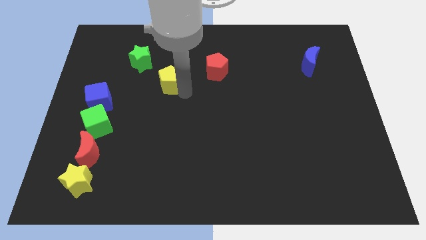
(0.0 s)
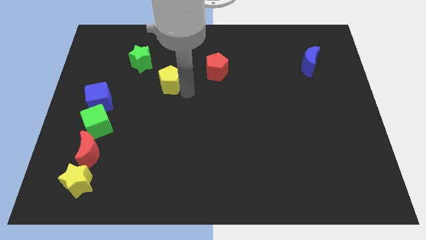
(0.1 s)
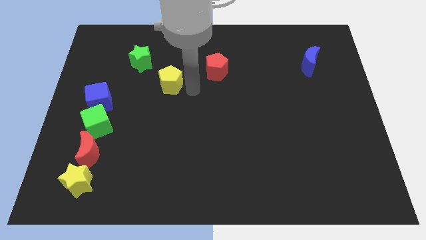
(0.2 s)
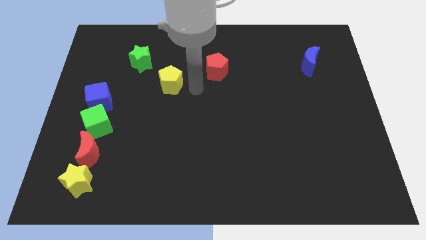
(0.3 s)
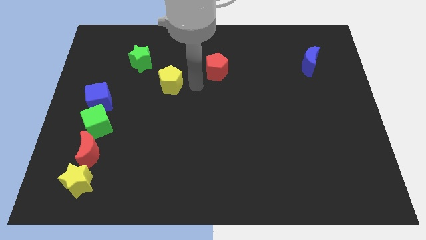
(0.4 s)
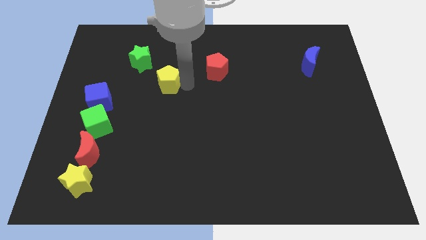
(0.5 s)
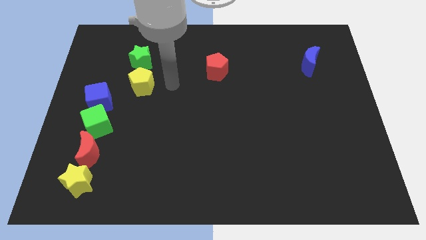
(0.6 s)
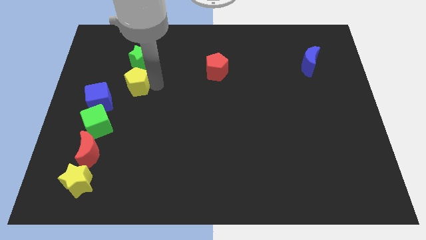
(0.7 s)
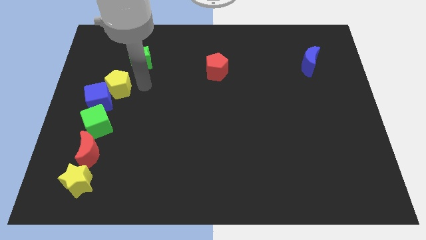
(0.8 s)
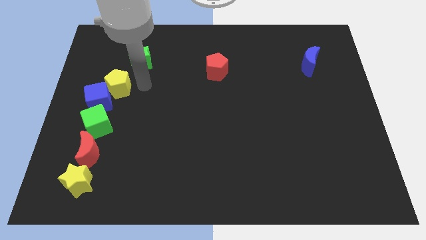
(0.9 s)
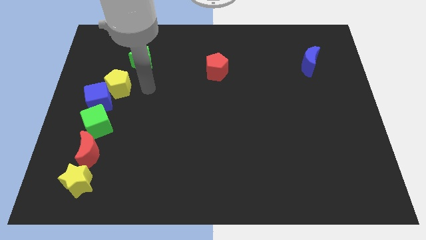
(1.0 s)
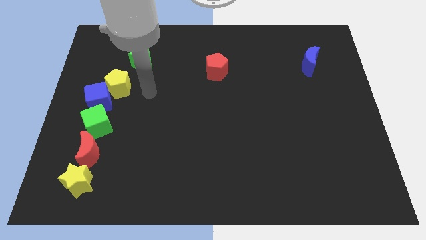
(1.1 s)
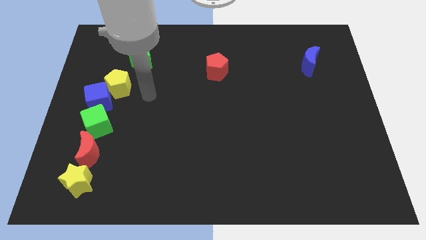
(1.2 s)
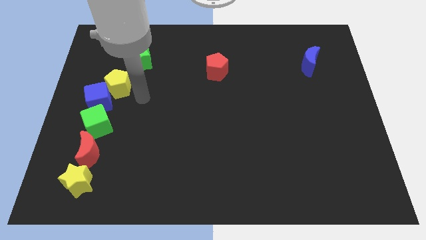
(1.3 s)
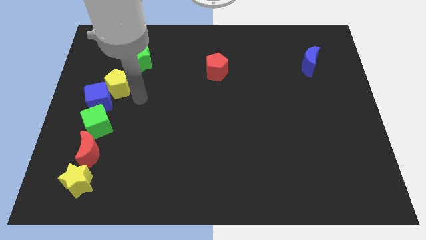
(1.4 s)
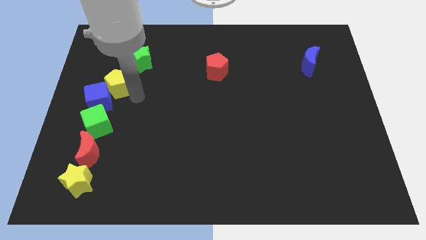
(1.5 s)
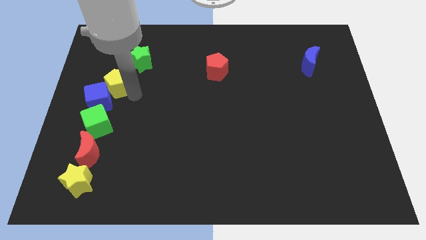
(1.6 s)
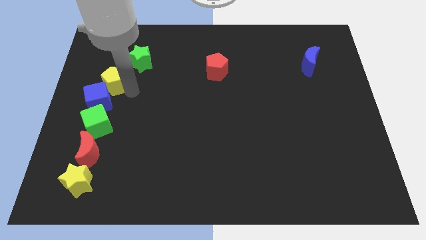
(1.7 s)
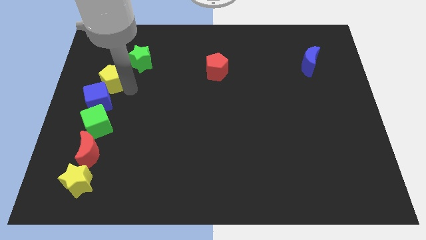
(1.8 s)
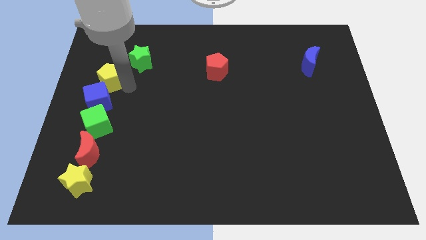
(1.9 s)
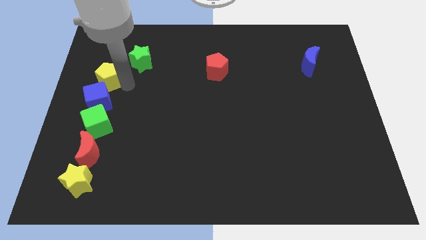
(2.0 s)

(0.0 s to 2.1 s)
place the yellow pentagon above the blue cube

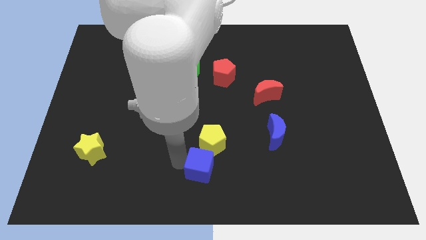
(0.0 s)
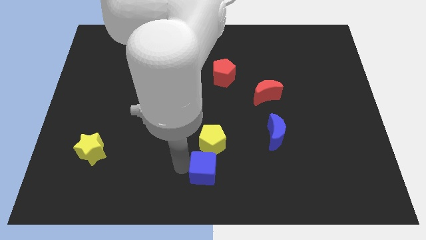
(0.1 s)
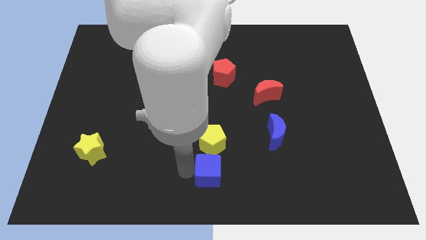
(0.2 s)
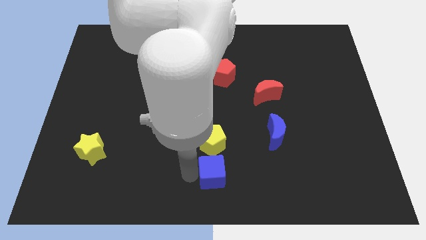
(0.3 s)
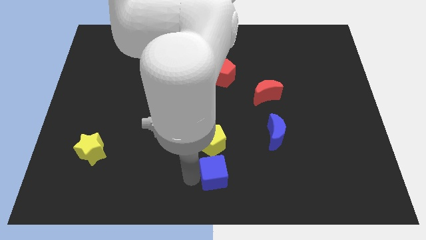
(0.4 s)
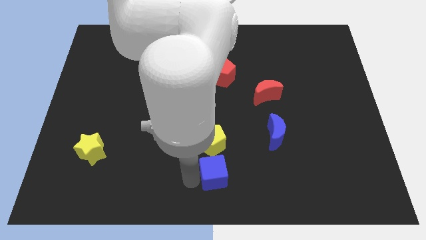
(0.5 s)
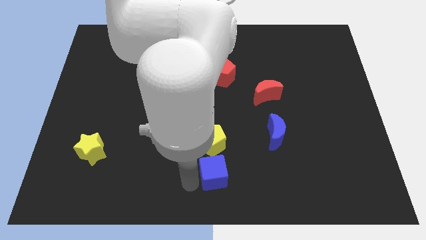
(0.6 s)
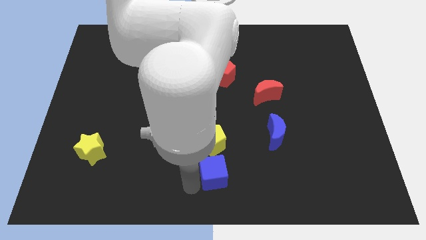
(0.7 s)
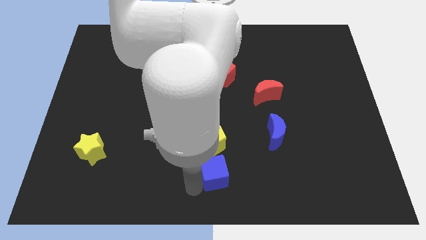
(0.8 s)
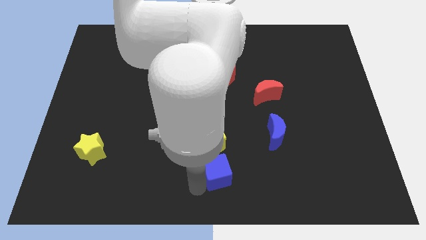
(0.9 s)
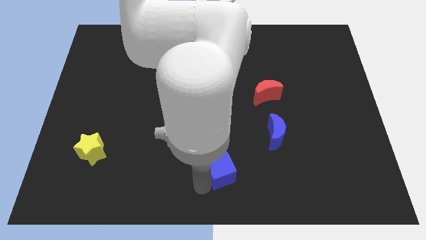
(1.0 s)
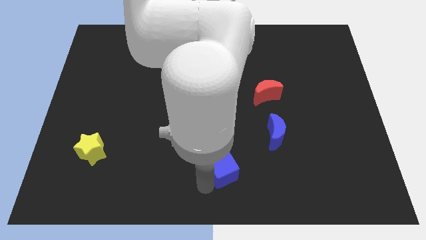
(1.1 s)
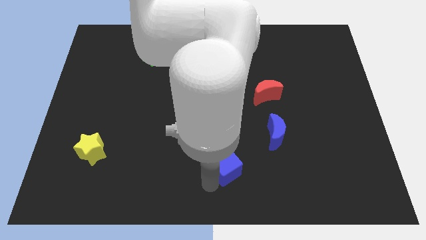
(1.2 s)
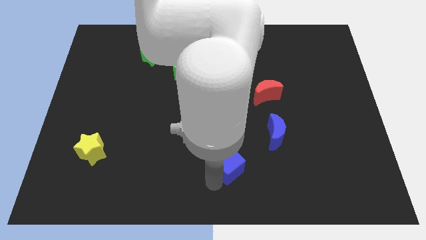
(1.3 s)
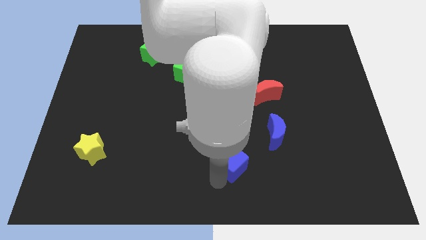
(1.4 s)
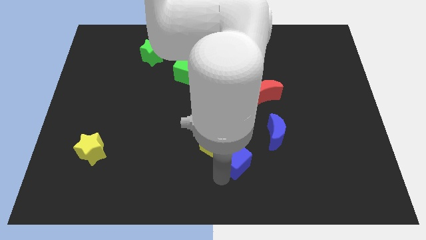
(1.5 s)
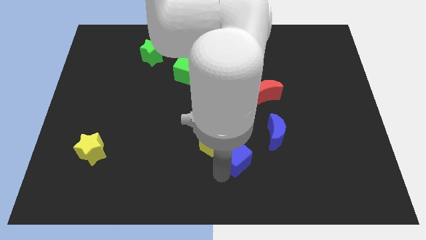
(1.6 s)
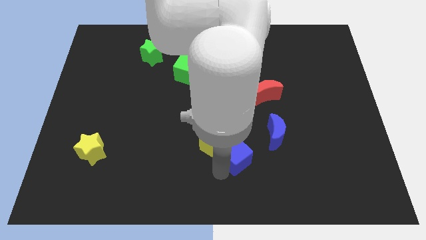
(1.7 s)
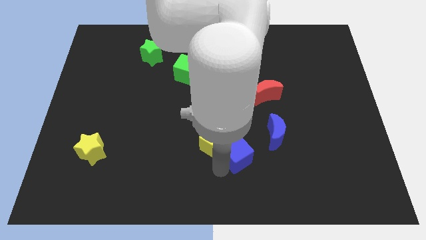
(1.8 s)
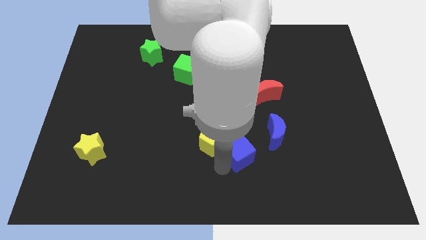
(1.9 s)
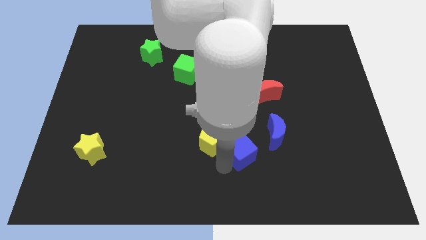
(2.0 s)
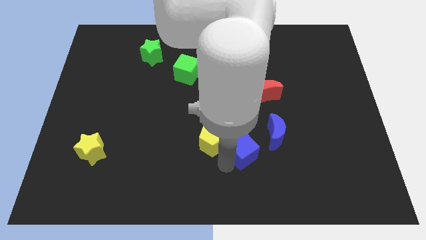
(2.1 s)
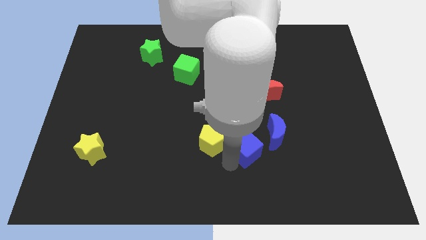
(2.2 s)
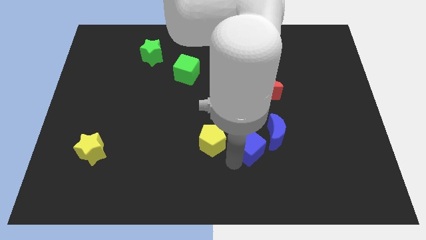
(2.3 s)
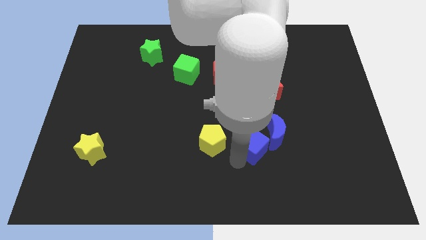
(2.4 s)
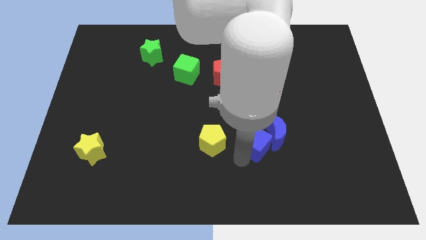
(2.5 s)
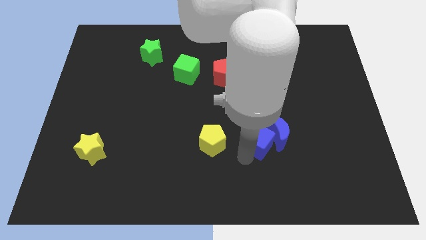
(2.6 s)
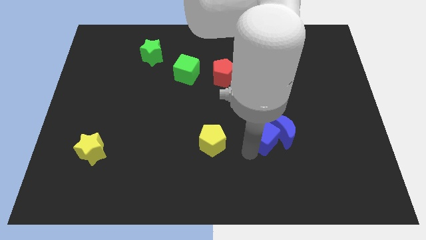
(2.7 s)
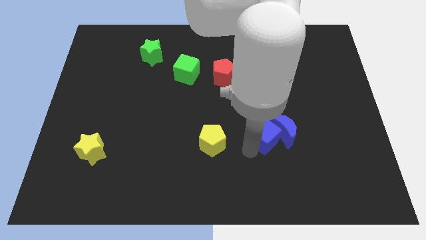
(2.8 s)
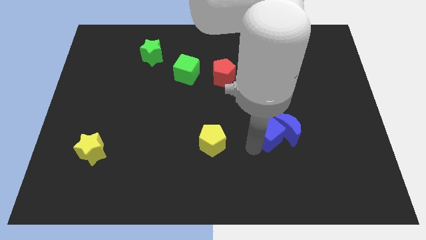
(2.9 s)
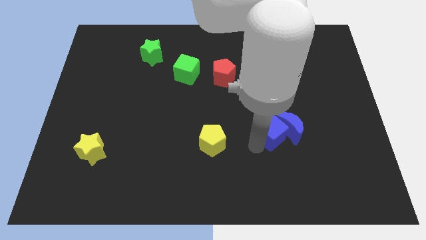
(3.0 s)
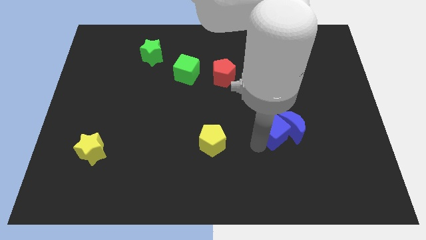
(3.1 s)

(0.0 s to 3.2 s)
move the blue cube close to the blue moon

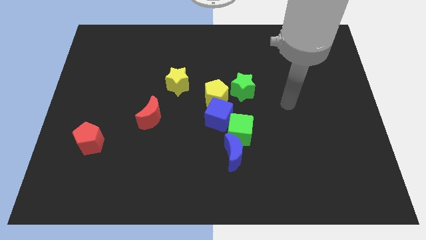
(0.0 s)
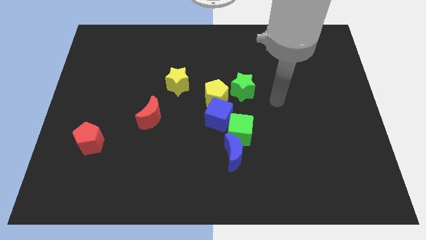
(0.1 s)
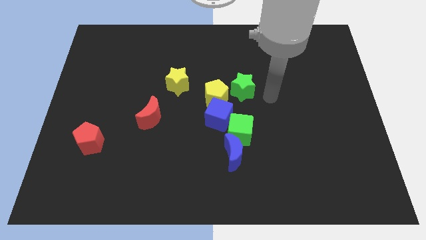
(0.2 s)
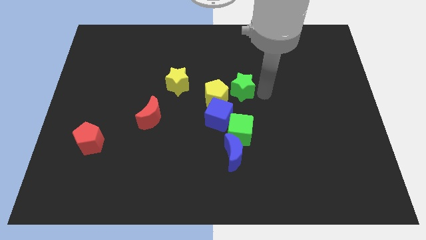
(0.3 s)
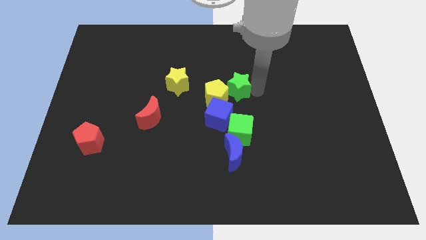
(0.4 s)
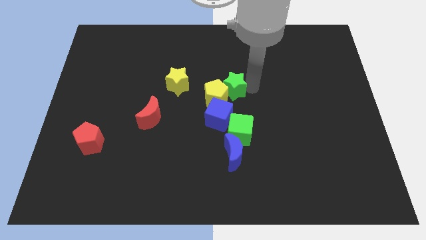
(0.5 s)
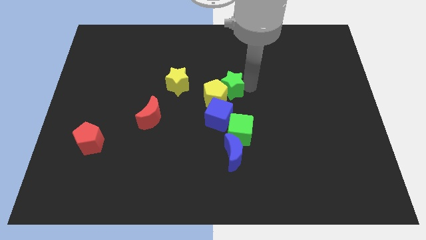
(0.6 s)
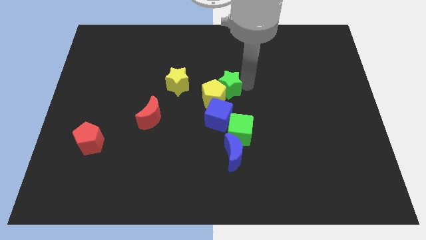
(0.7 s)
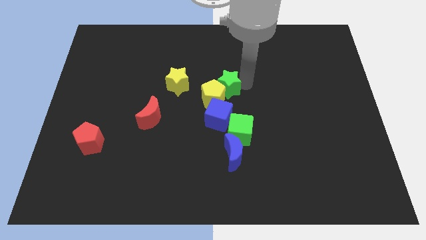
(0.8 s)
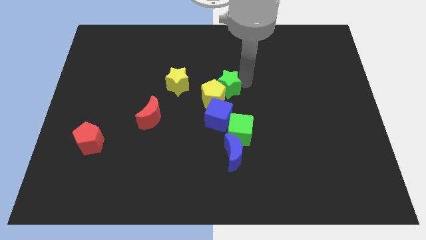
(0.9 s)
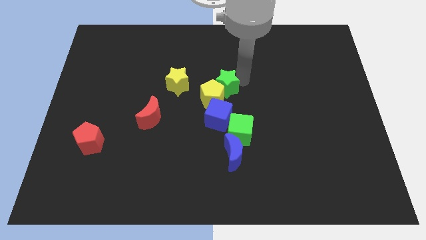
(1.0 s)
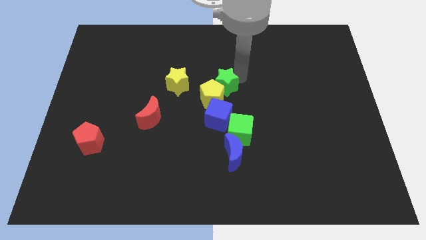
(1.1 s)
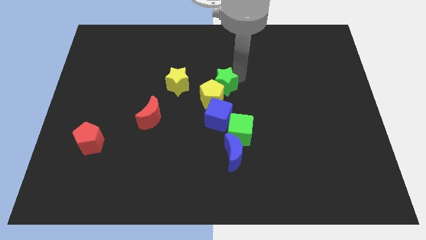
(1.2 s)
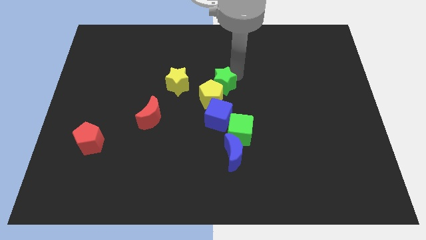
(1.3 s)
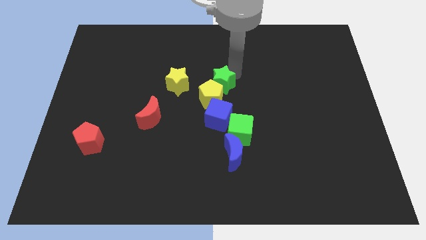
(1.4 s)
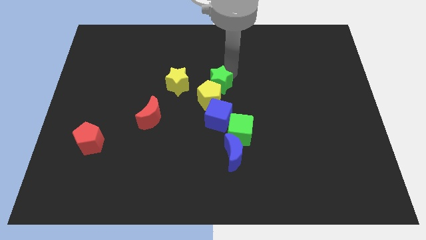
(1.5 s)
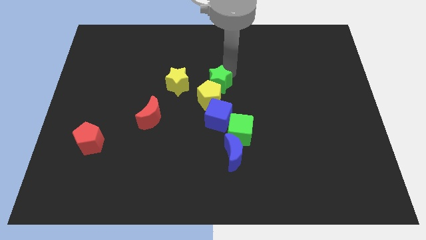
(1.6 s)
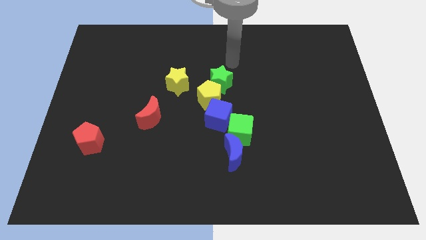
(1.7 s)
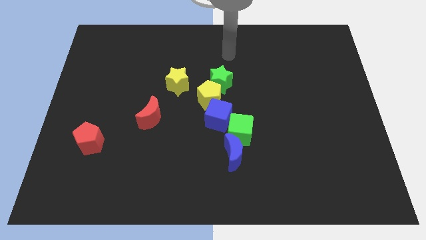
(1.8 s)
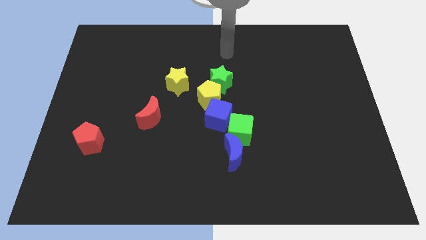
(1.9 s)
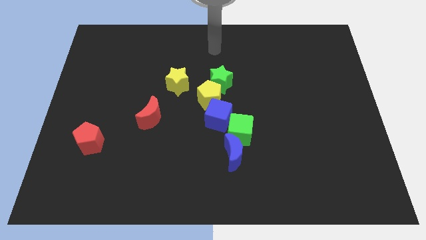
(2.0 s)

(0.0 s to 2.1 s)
push the green star into the yellow pentagon

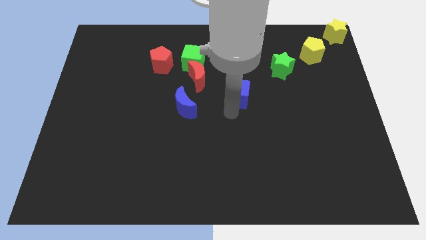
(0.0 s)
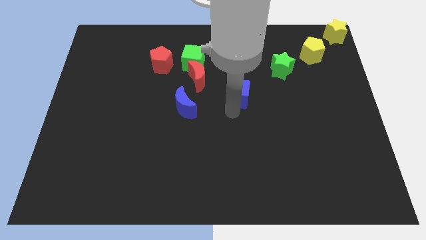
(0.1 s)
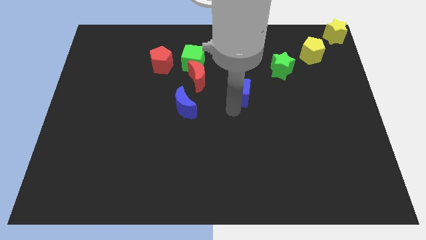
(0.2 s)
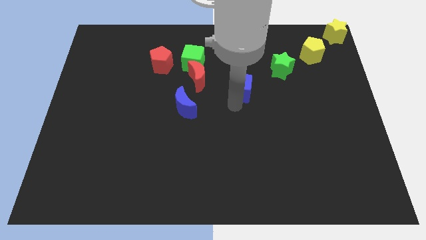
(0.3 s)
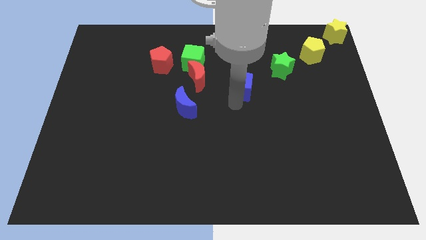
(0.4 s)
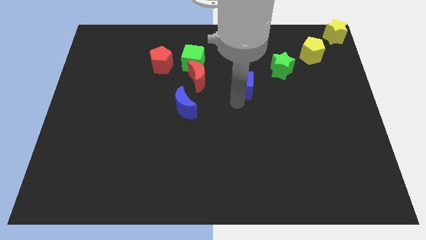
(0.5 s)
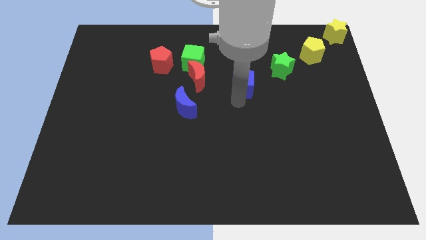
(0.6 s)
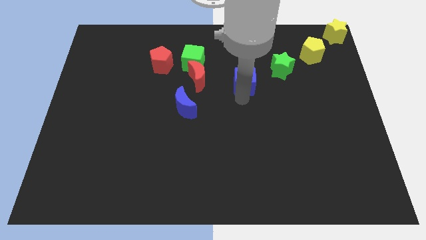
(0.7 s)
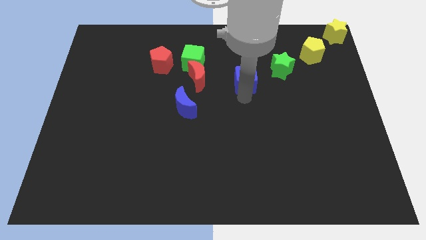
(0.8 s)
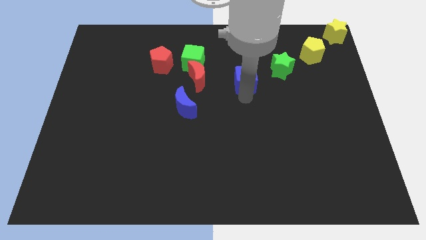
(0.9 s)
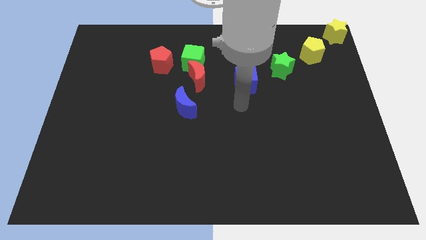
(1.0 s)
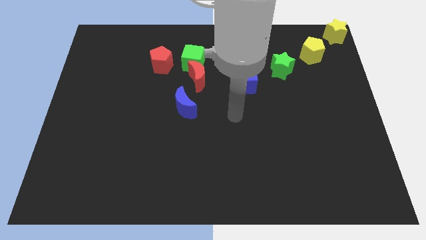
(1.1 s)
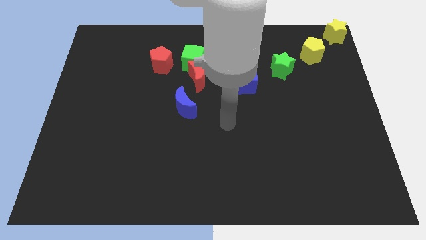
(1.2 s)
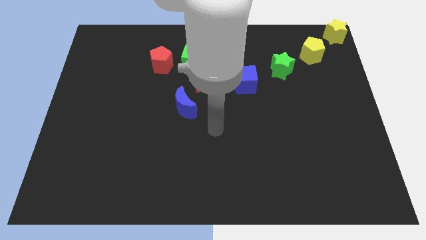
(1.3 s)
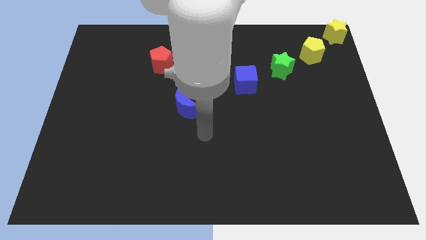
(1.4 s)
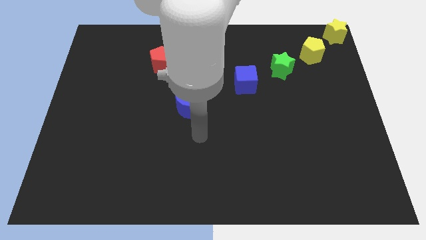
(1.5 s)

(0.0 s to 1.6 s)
put the blue cube between the blue moon and green star
